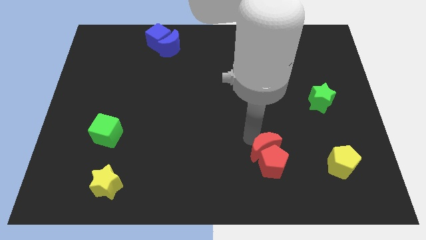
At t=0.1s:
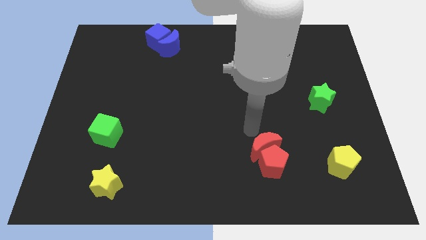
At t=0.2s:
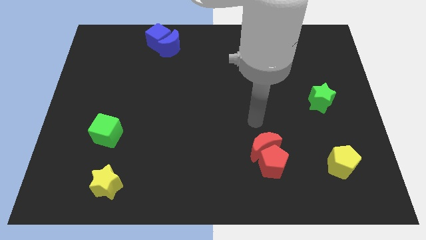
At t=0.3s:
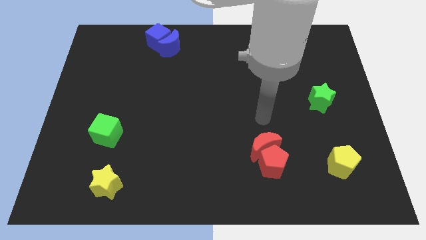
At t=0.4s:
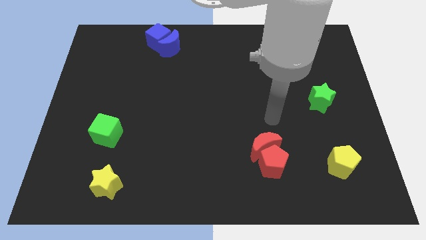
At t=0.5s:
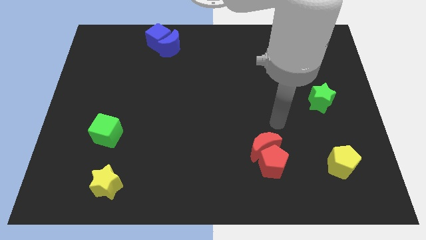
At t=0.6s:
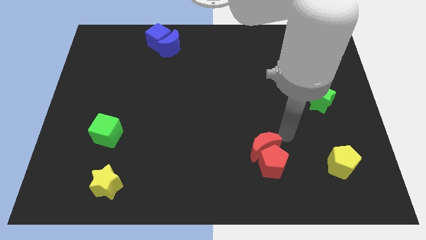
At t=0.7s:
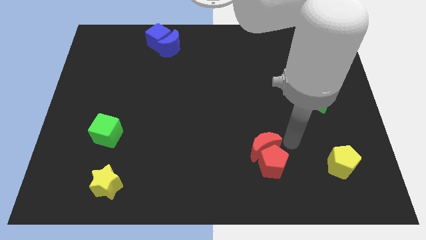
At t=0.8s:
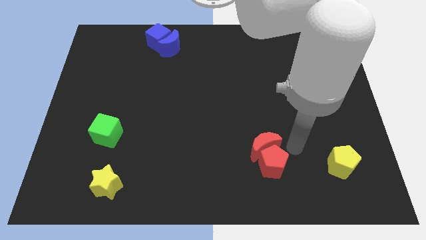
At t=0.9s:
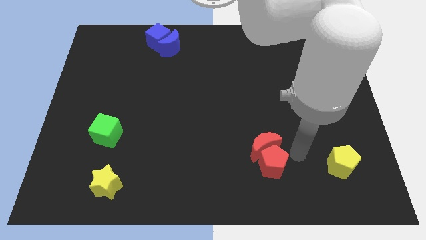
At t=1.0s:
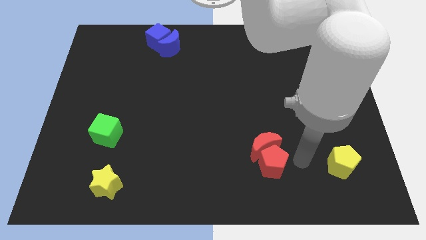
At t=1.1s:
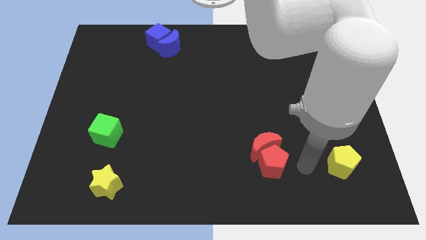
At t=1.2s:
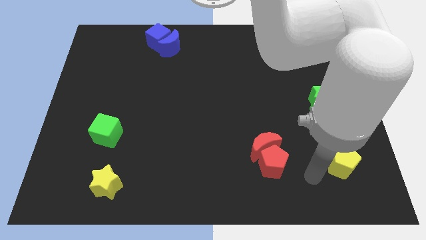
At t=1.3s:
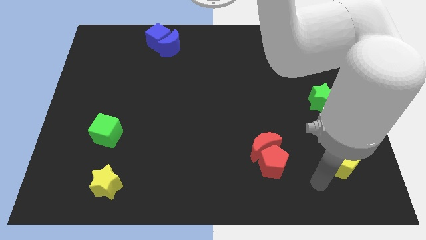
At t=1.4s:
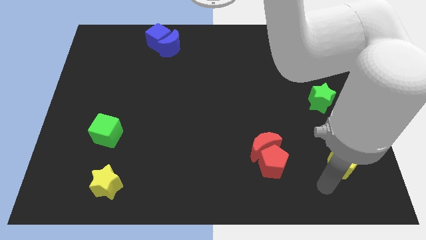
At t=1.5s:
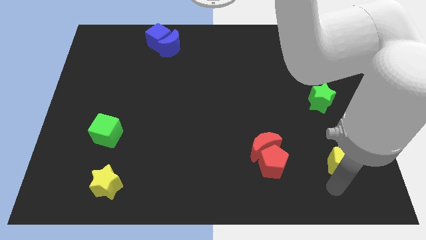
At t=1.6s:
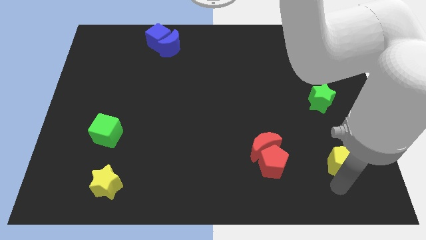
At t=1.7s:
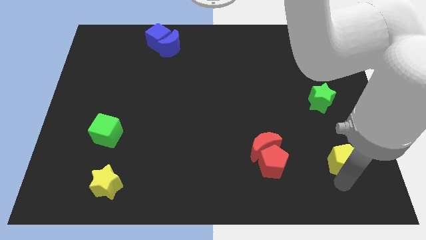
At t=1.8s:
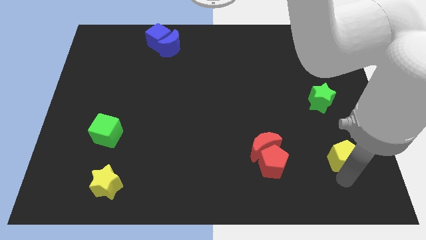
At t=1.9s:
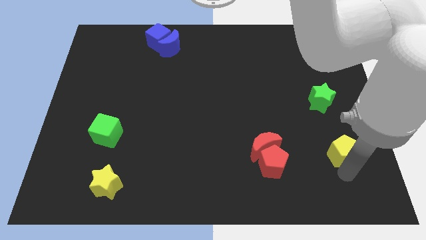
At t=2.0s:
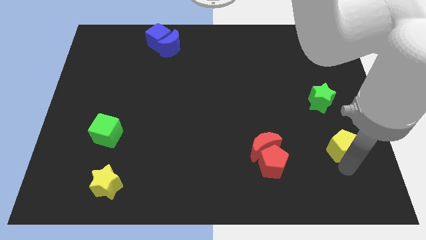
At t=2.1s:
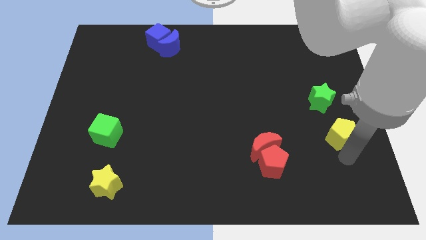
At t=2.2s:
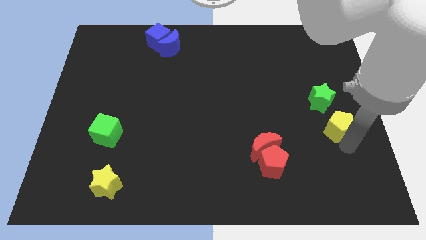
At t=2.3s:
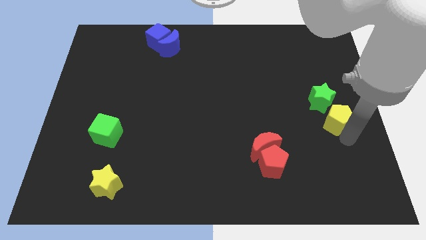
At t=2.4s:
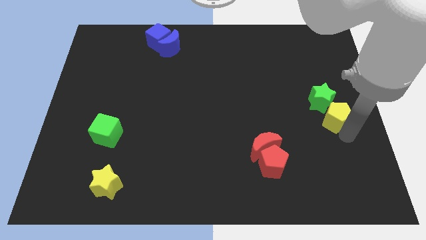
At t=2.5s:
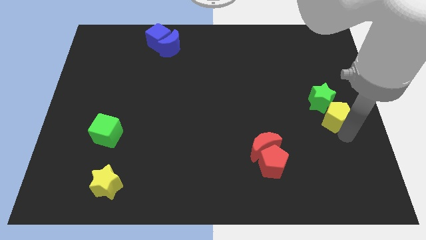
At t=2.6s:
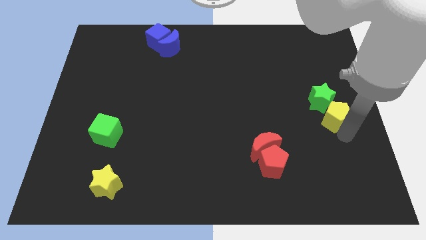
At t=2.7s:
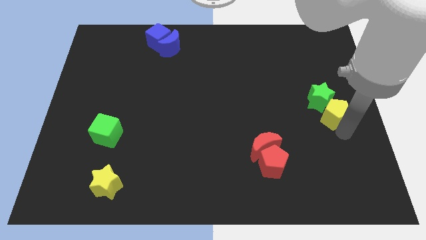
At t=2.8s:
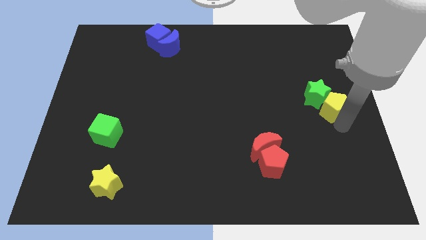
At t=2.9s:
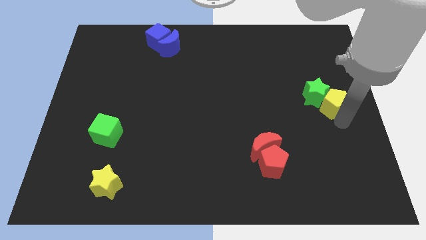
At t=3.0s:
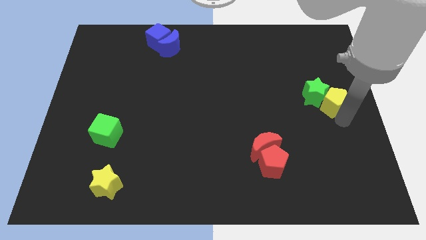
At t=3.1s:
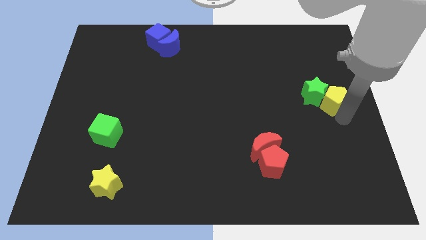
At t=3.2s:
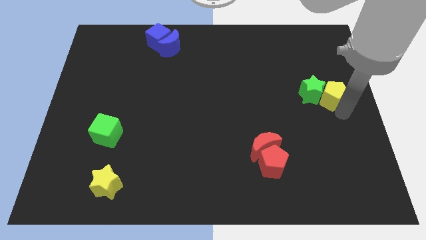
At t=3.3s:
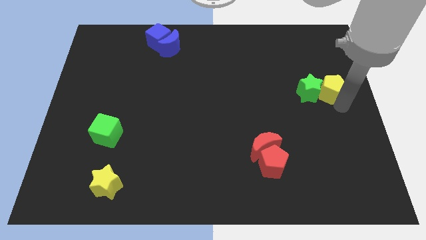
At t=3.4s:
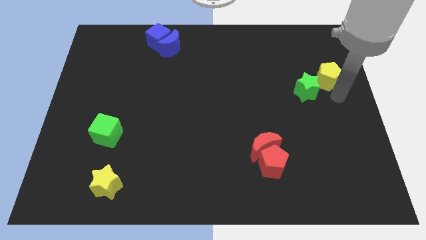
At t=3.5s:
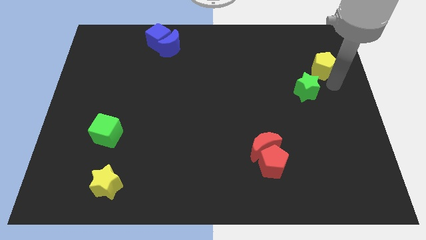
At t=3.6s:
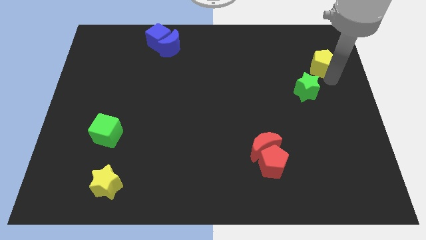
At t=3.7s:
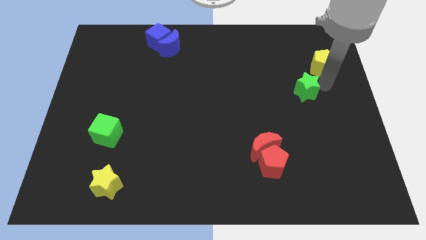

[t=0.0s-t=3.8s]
move the yellow pentagon into the green star

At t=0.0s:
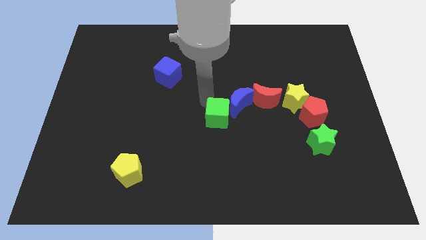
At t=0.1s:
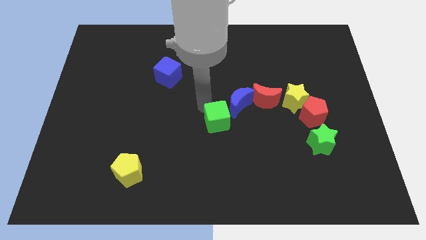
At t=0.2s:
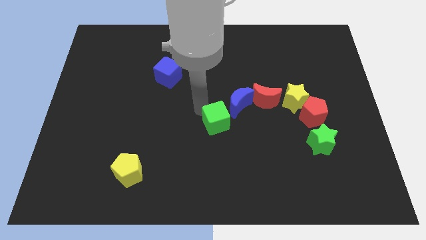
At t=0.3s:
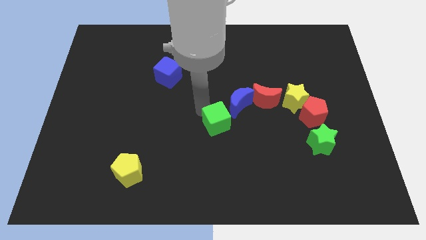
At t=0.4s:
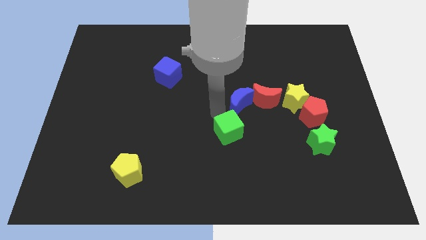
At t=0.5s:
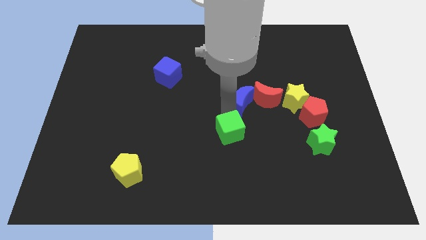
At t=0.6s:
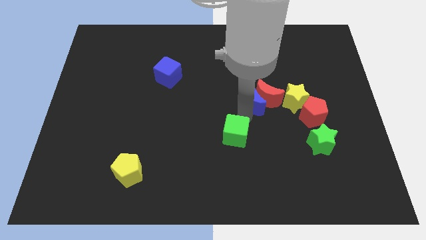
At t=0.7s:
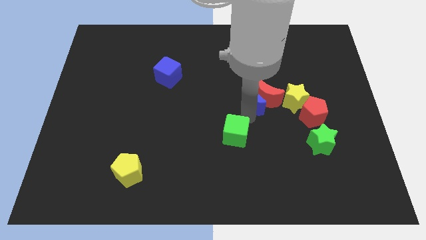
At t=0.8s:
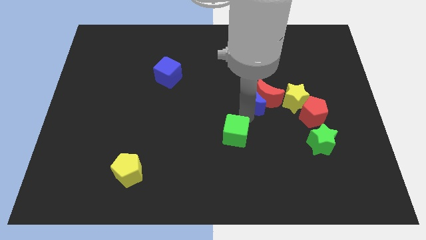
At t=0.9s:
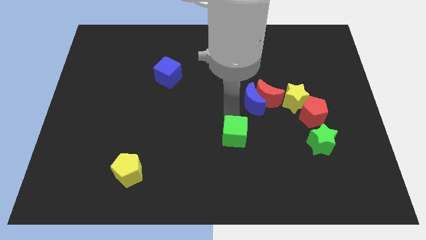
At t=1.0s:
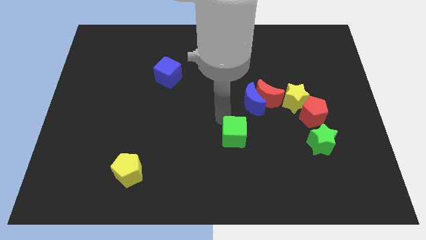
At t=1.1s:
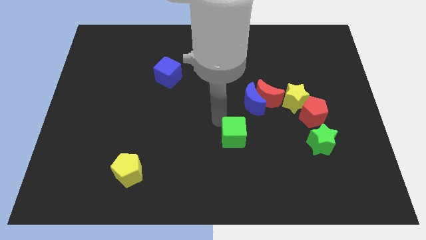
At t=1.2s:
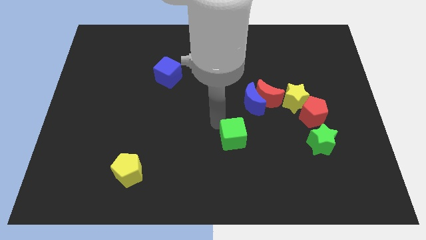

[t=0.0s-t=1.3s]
move the green cube away from the blue crescent

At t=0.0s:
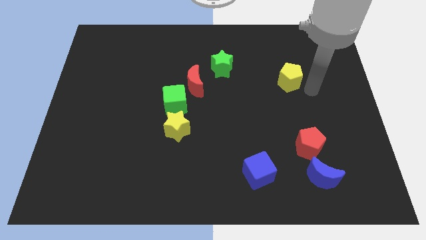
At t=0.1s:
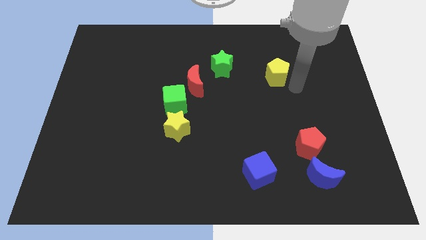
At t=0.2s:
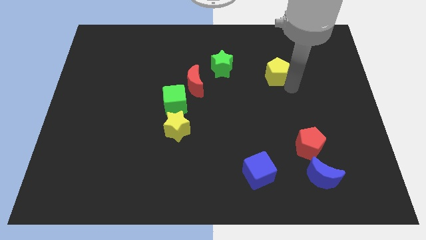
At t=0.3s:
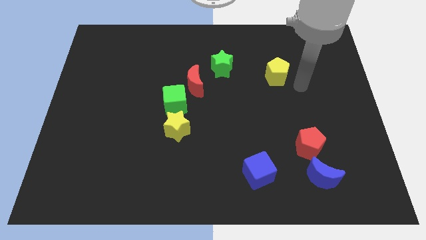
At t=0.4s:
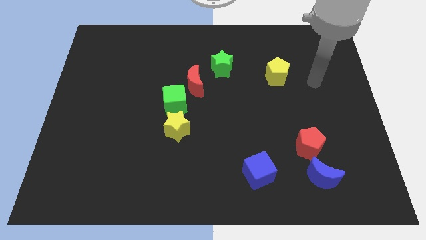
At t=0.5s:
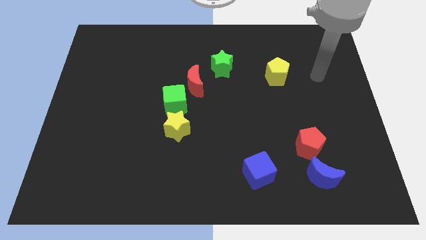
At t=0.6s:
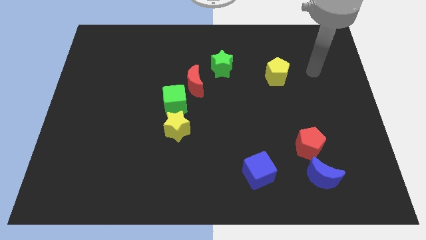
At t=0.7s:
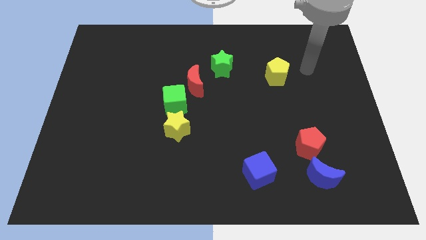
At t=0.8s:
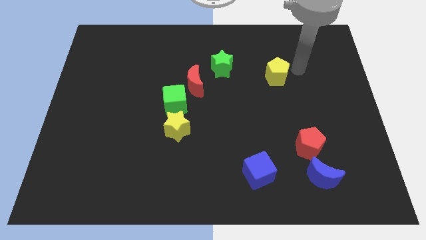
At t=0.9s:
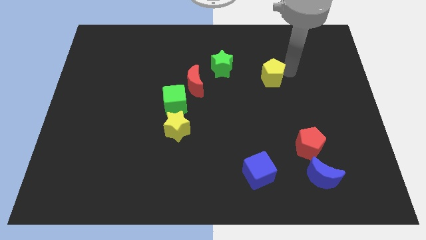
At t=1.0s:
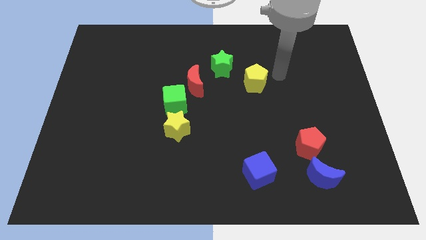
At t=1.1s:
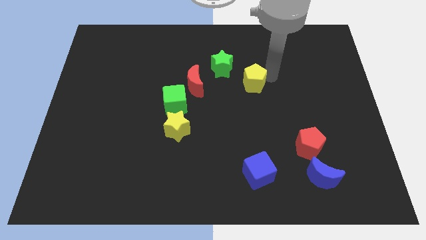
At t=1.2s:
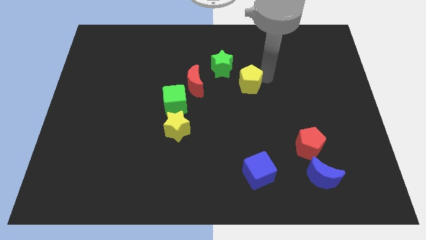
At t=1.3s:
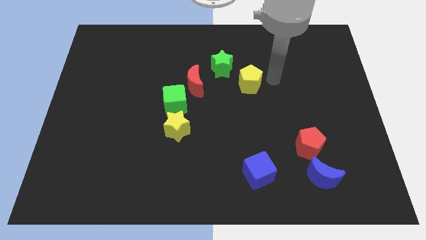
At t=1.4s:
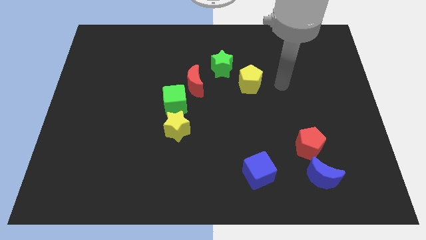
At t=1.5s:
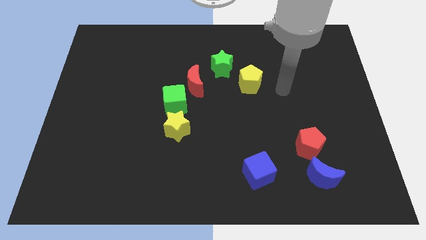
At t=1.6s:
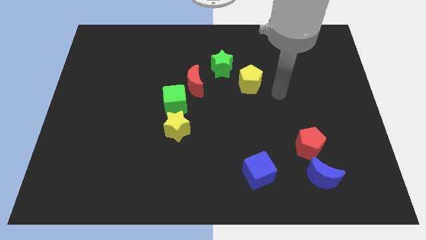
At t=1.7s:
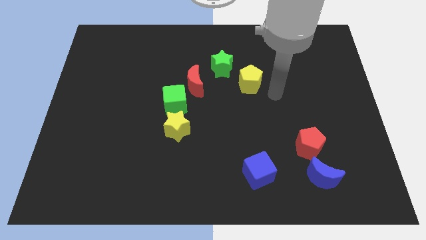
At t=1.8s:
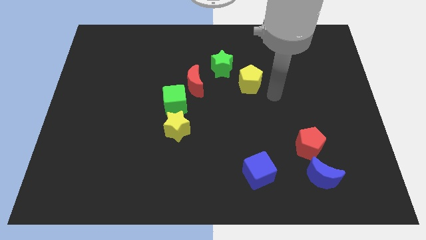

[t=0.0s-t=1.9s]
push the yellow pentagon towards the green star

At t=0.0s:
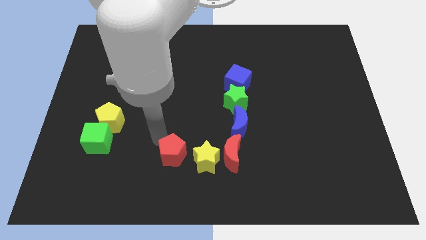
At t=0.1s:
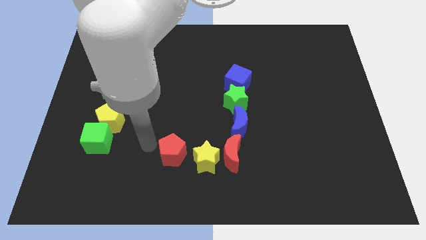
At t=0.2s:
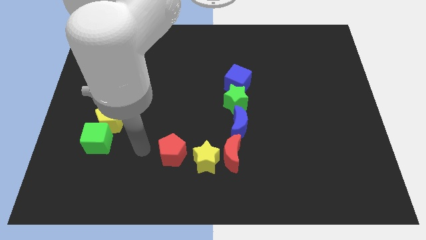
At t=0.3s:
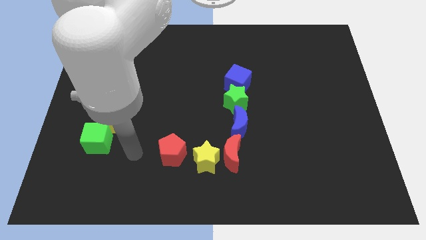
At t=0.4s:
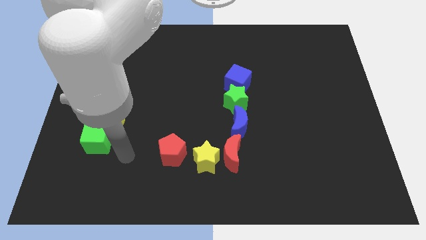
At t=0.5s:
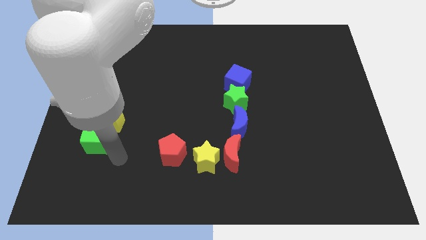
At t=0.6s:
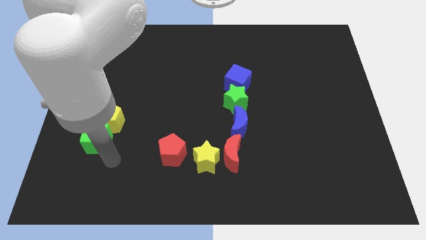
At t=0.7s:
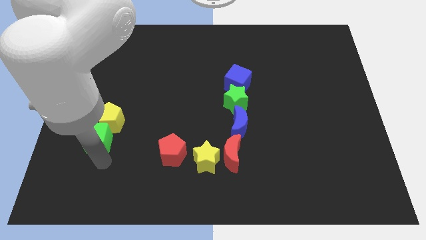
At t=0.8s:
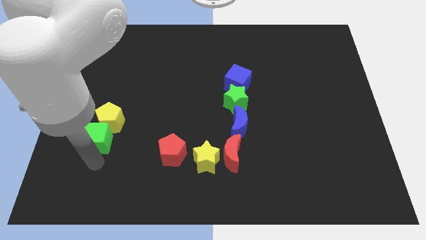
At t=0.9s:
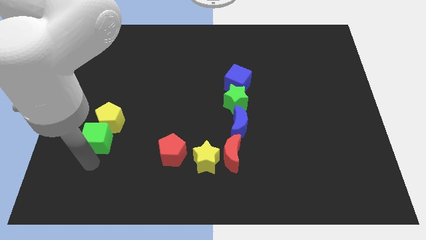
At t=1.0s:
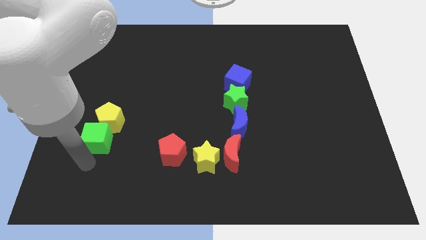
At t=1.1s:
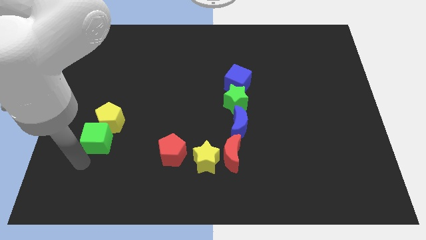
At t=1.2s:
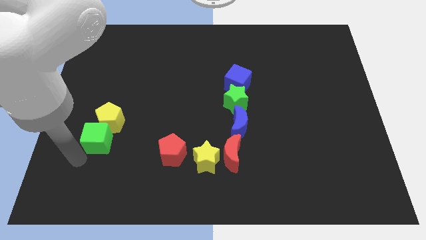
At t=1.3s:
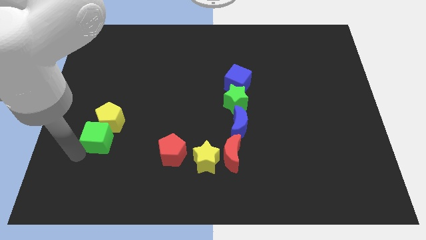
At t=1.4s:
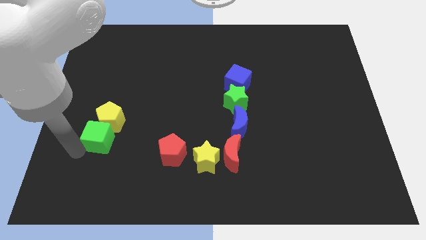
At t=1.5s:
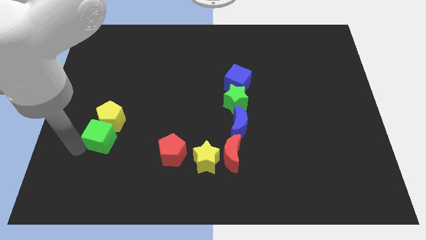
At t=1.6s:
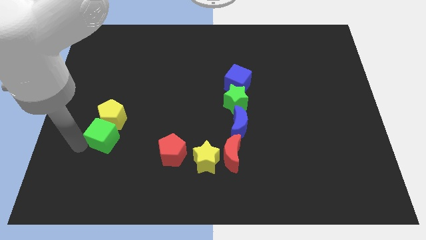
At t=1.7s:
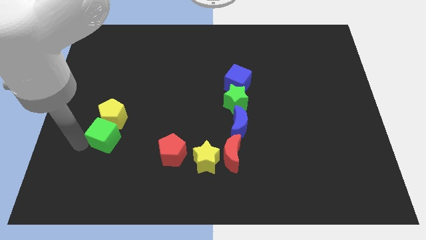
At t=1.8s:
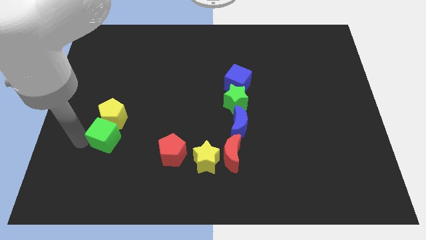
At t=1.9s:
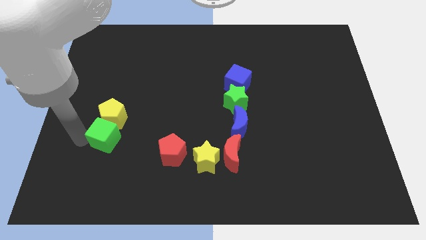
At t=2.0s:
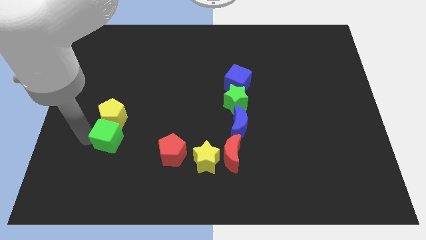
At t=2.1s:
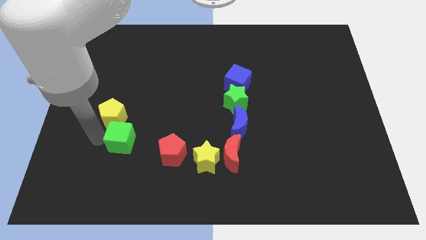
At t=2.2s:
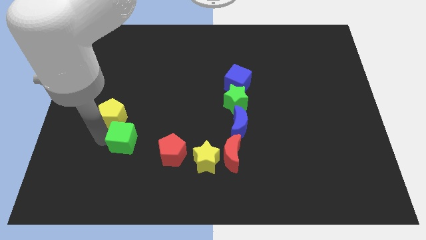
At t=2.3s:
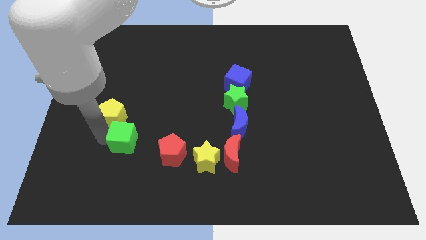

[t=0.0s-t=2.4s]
move green cube slightly to the right
